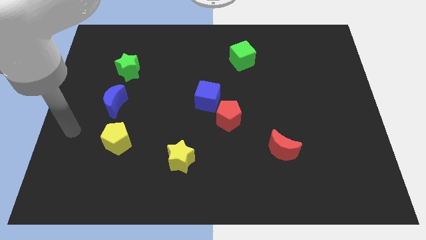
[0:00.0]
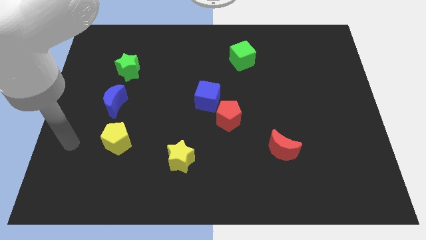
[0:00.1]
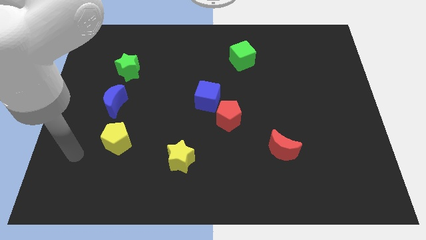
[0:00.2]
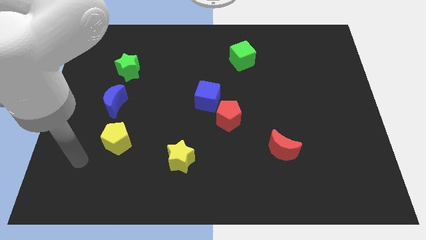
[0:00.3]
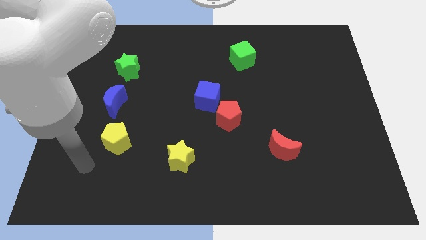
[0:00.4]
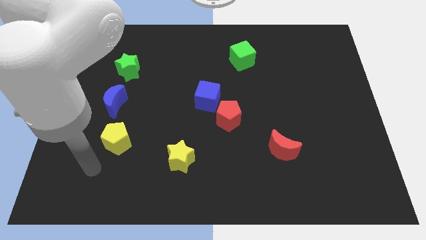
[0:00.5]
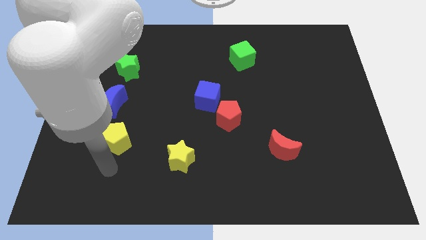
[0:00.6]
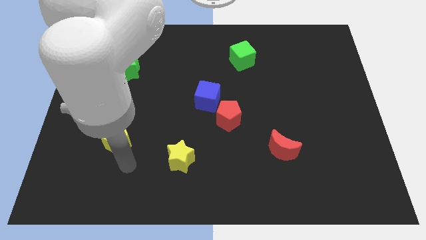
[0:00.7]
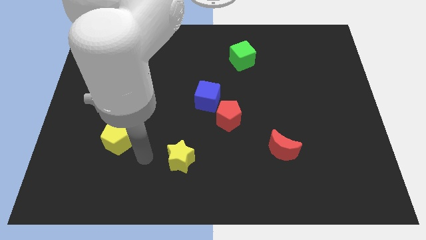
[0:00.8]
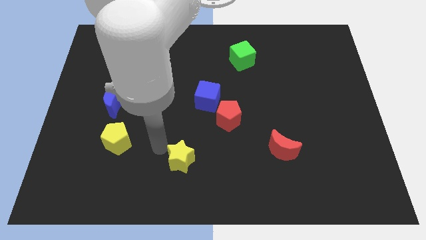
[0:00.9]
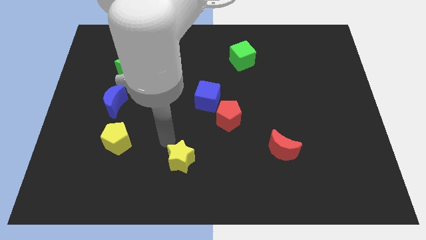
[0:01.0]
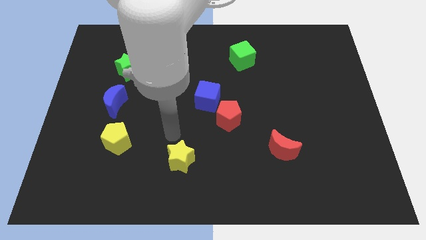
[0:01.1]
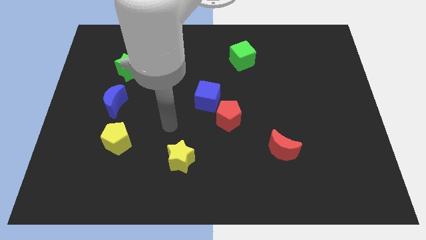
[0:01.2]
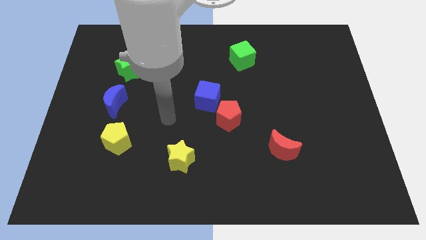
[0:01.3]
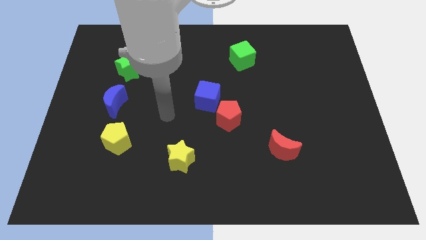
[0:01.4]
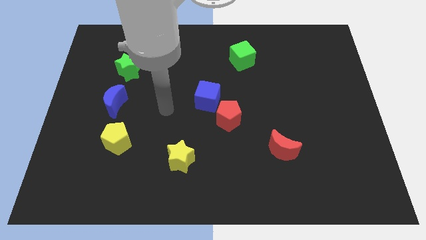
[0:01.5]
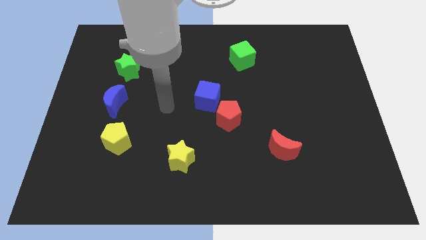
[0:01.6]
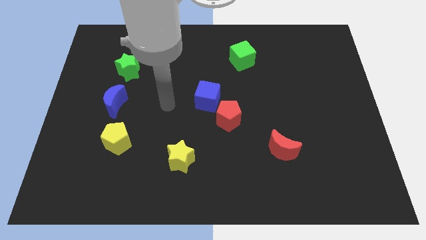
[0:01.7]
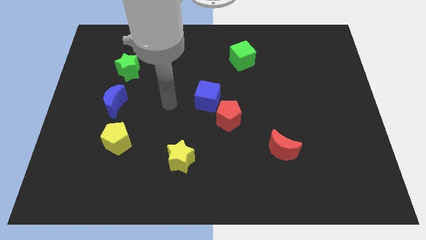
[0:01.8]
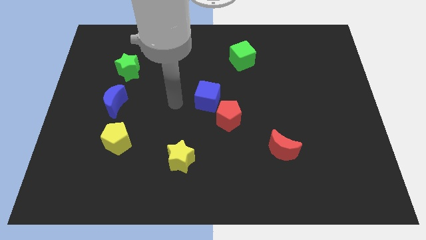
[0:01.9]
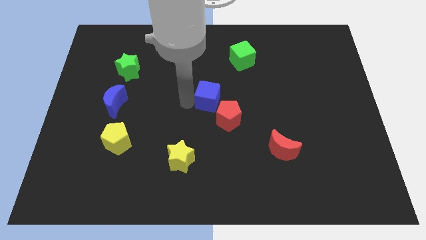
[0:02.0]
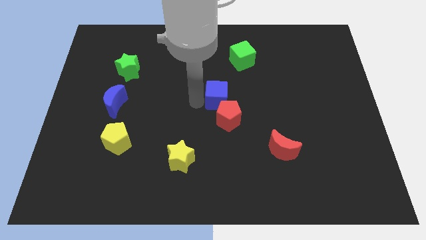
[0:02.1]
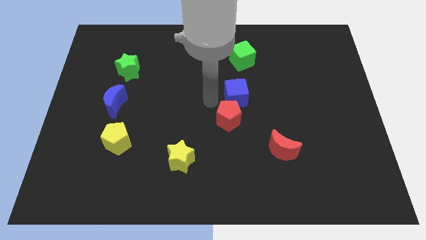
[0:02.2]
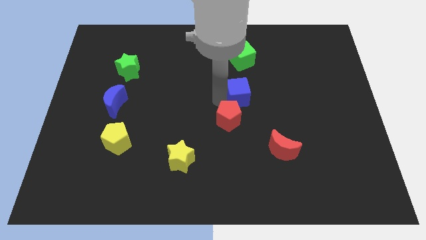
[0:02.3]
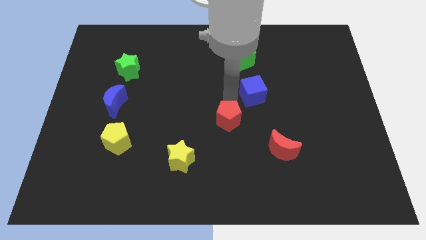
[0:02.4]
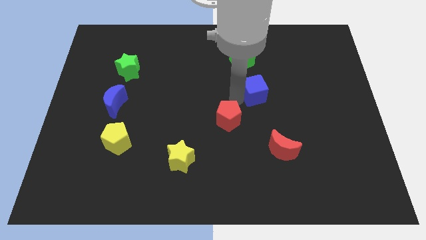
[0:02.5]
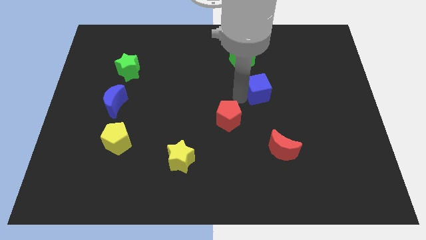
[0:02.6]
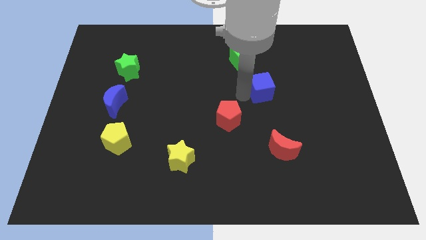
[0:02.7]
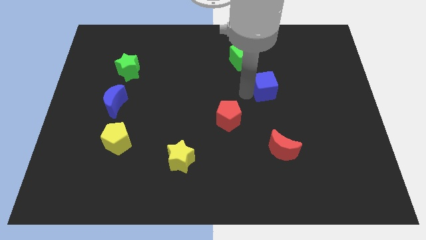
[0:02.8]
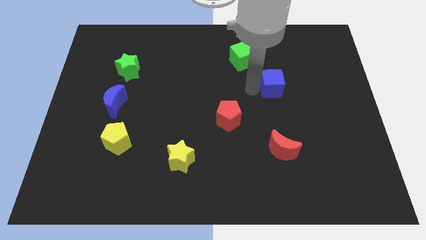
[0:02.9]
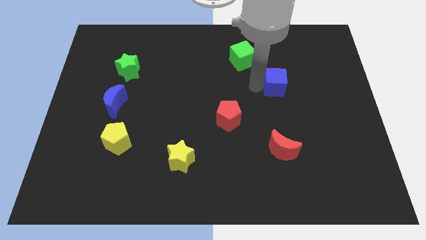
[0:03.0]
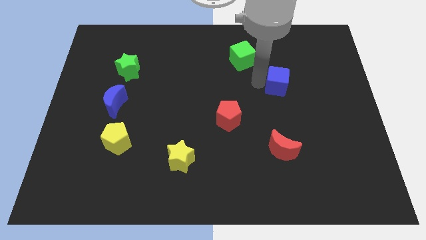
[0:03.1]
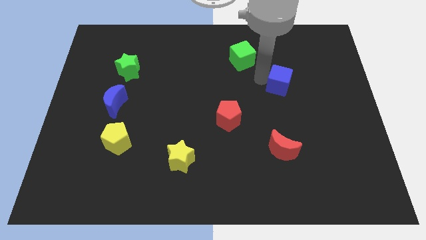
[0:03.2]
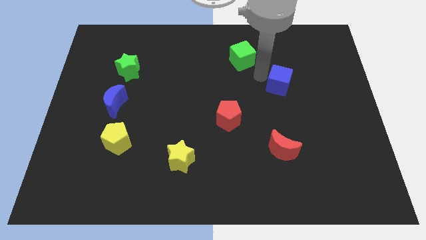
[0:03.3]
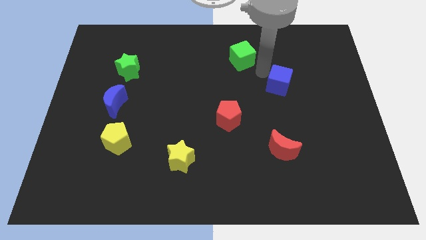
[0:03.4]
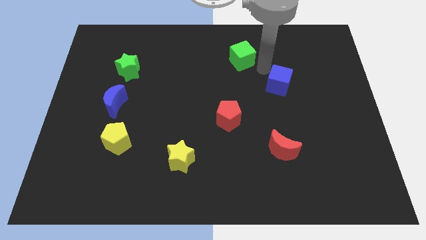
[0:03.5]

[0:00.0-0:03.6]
place the blue cube diagonally at the bottom right of the green cube

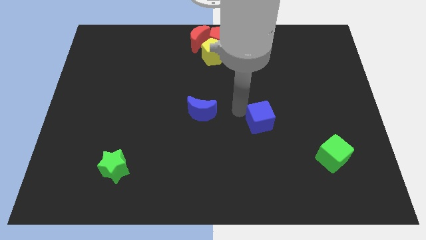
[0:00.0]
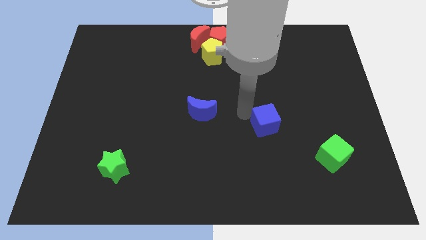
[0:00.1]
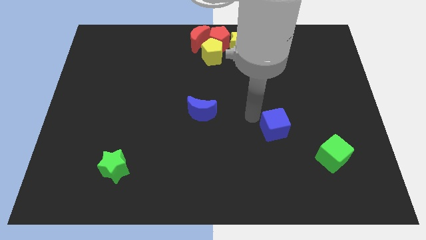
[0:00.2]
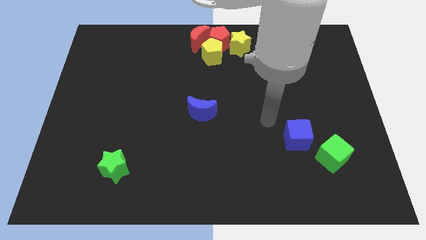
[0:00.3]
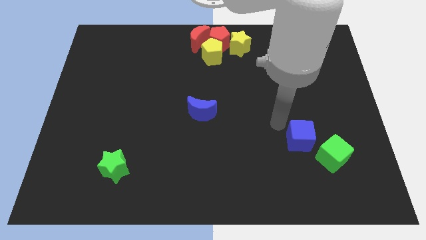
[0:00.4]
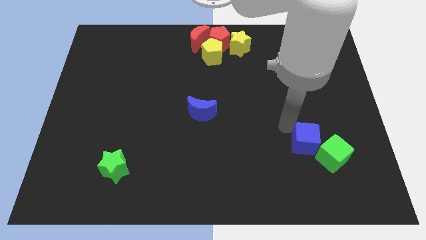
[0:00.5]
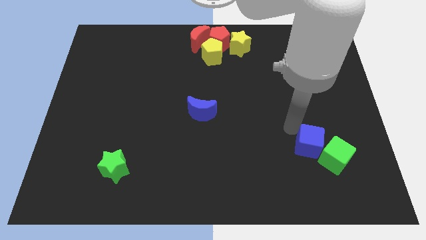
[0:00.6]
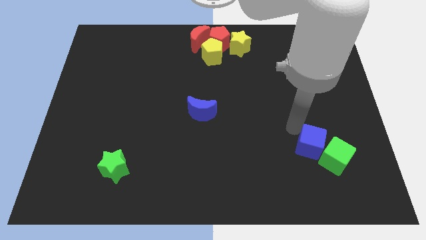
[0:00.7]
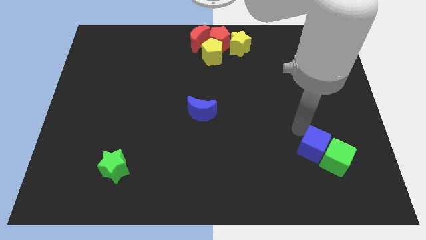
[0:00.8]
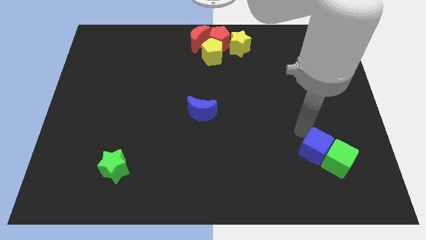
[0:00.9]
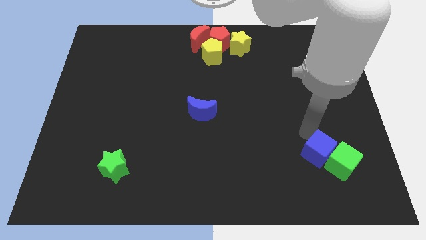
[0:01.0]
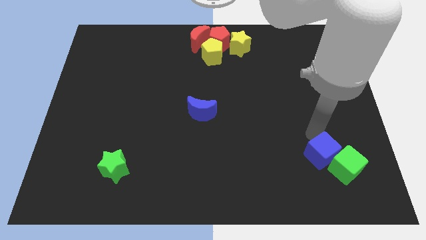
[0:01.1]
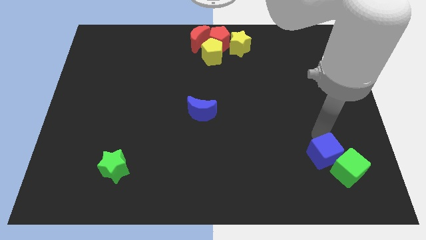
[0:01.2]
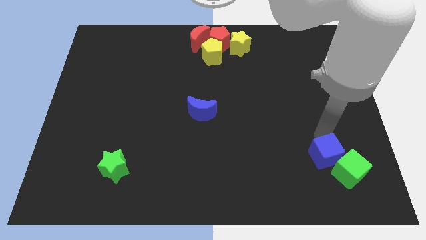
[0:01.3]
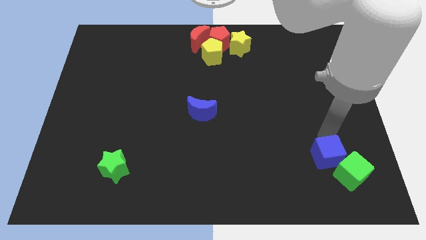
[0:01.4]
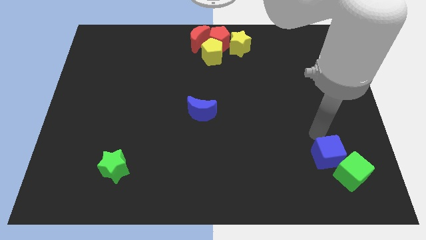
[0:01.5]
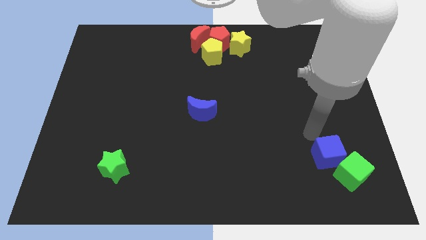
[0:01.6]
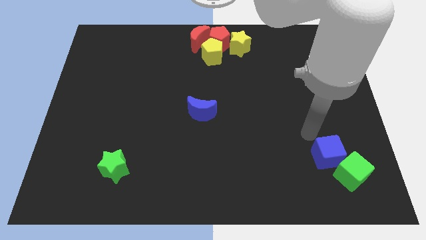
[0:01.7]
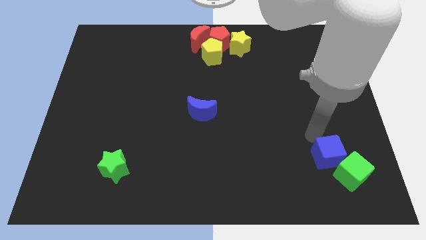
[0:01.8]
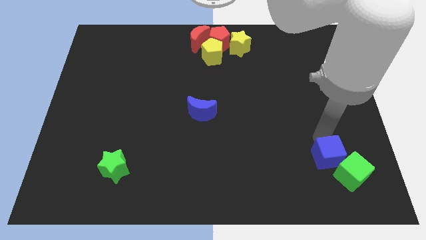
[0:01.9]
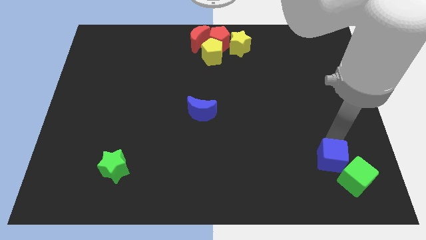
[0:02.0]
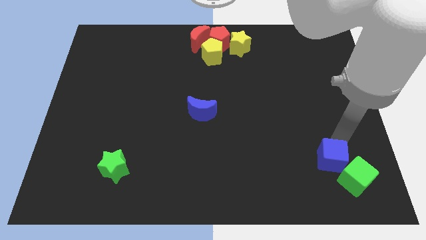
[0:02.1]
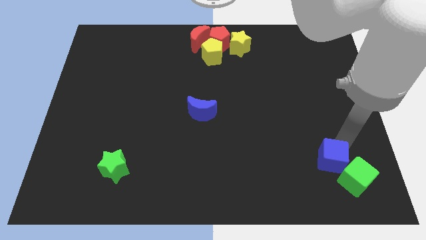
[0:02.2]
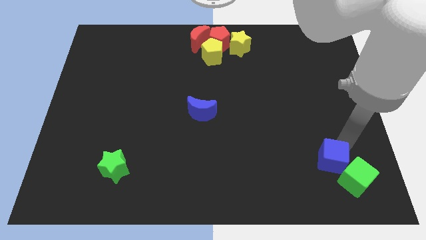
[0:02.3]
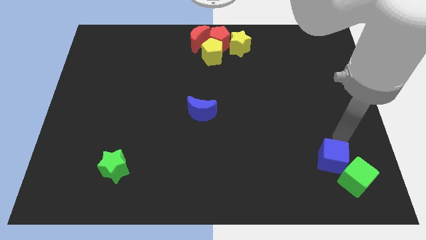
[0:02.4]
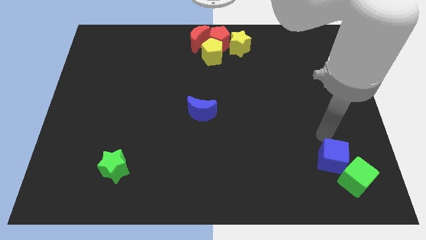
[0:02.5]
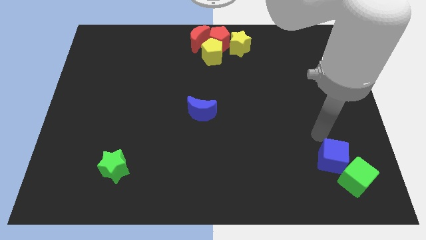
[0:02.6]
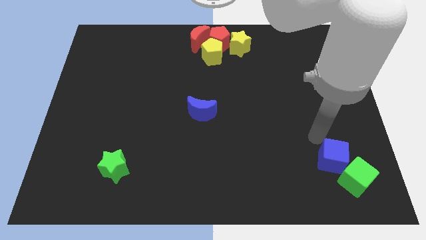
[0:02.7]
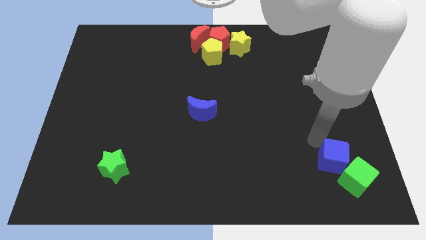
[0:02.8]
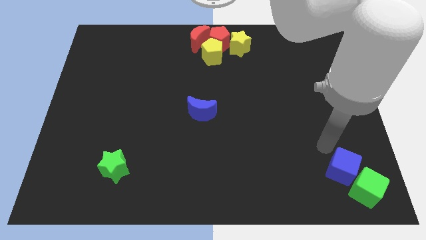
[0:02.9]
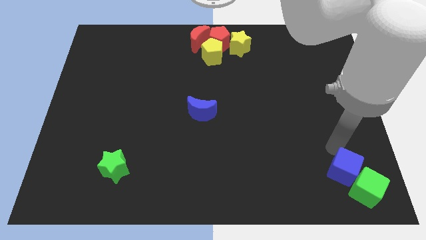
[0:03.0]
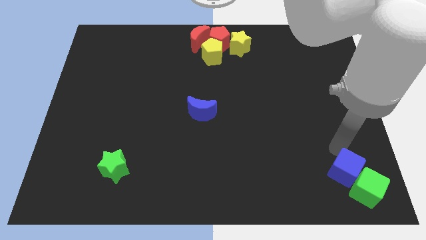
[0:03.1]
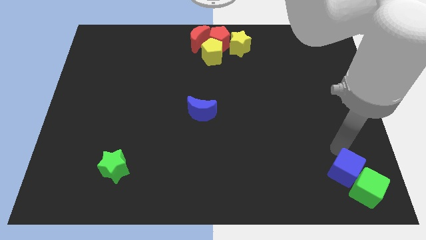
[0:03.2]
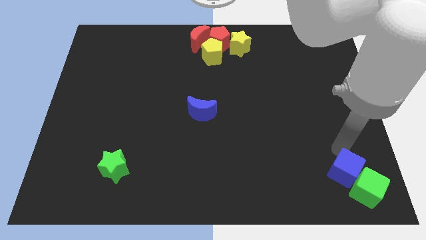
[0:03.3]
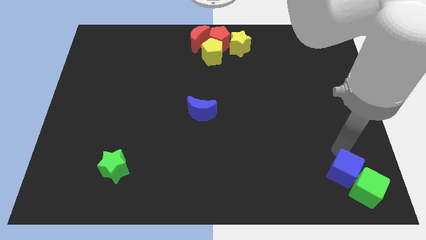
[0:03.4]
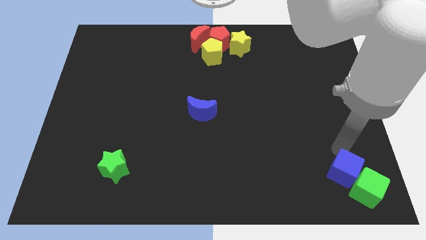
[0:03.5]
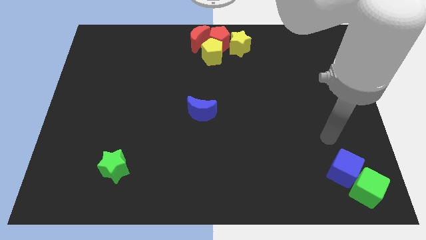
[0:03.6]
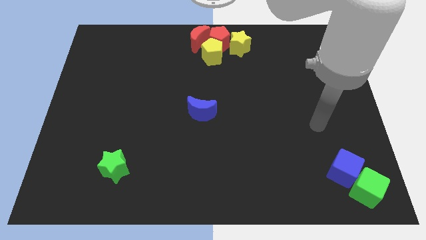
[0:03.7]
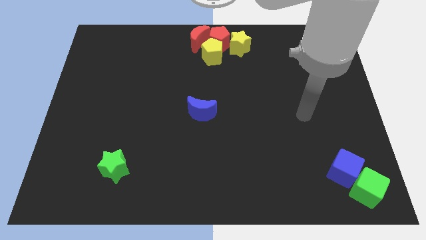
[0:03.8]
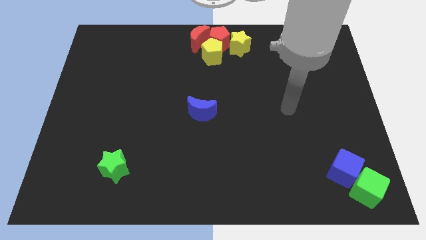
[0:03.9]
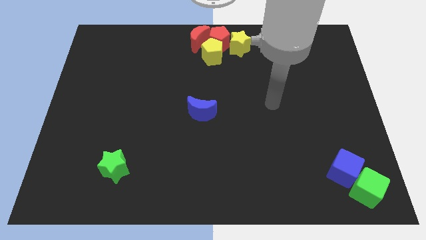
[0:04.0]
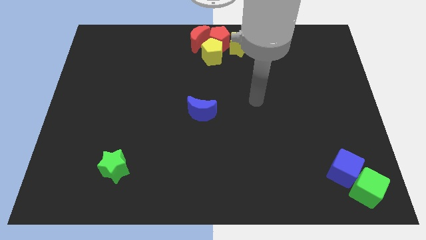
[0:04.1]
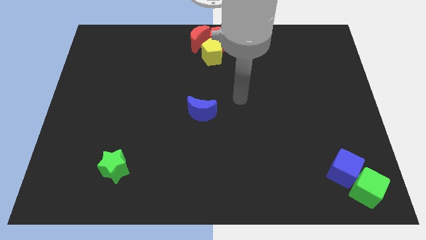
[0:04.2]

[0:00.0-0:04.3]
move the blue cube into the green cube

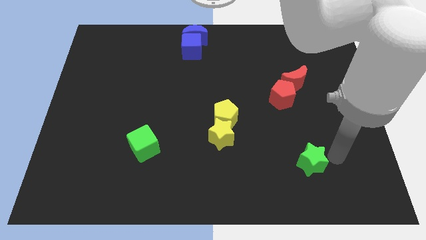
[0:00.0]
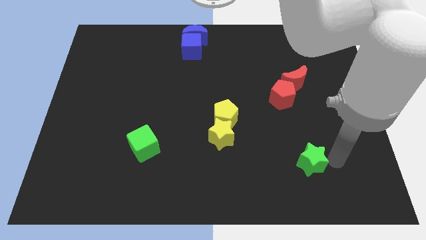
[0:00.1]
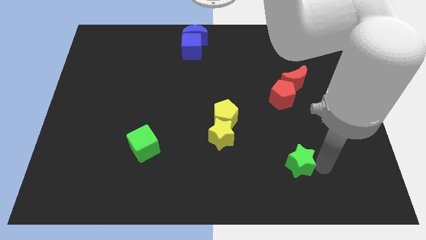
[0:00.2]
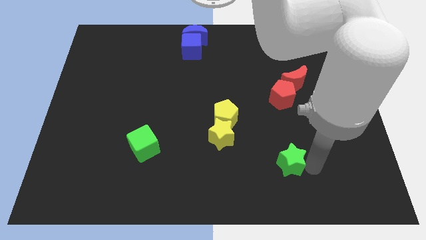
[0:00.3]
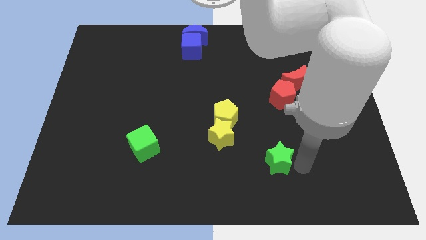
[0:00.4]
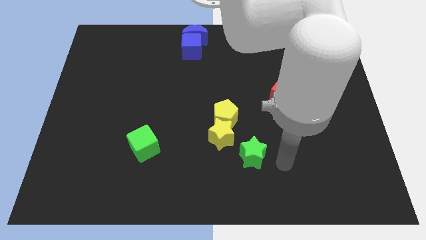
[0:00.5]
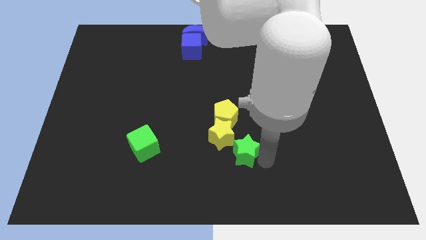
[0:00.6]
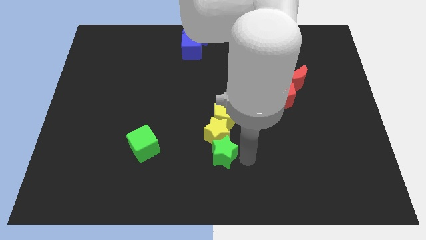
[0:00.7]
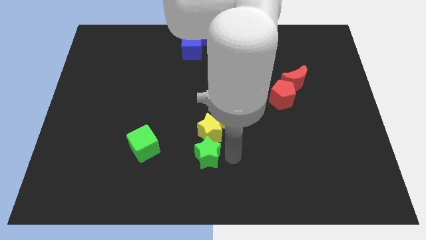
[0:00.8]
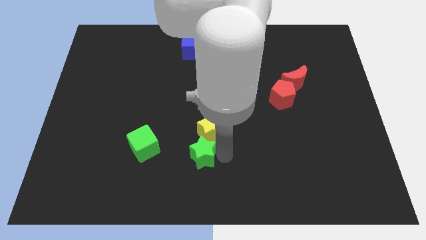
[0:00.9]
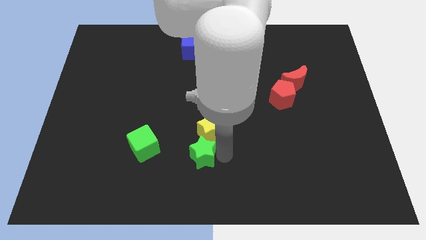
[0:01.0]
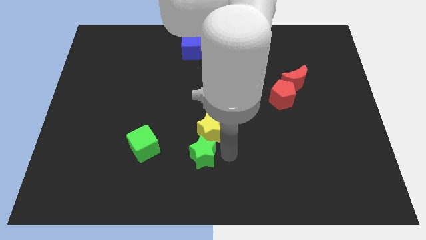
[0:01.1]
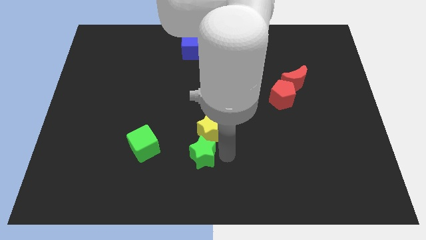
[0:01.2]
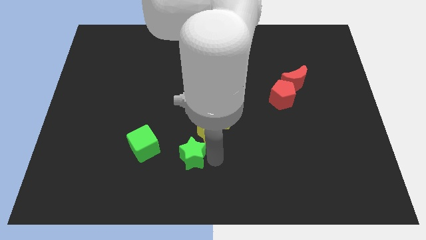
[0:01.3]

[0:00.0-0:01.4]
touch the yellow star using green star
